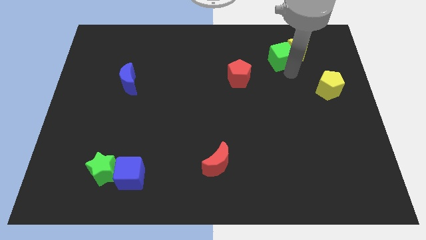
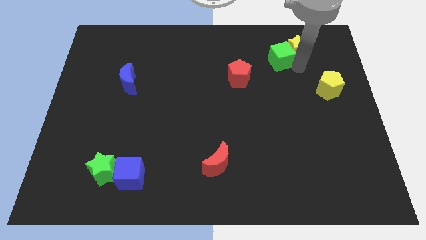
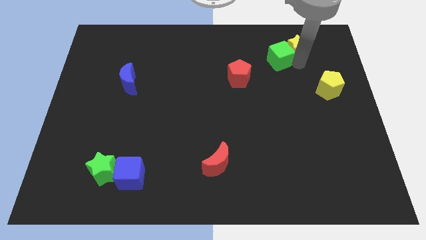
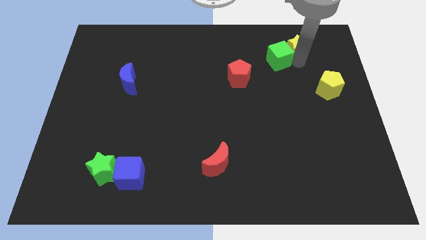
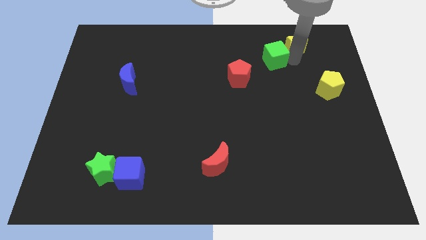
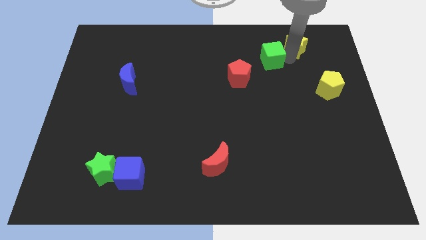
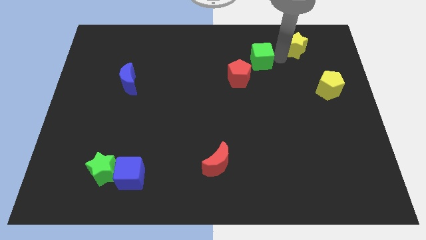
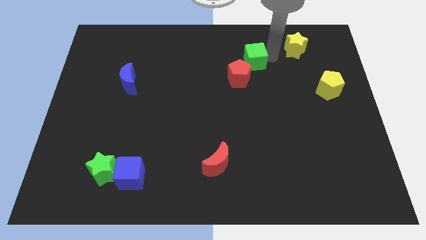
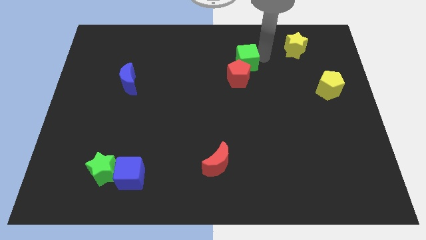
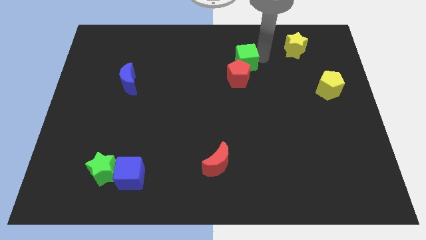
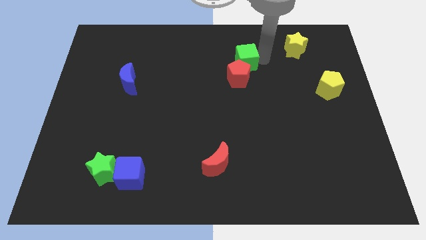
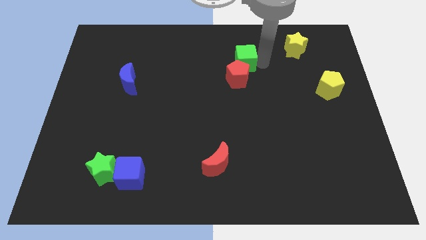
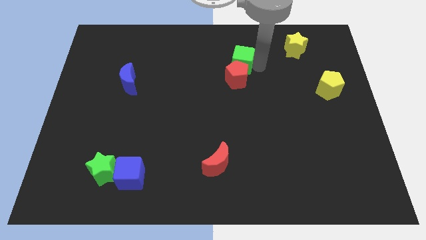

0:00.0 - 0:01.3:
drag the green cube into the top side of the red pentagon

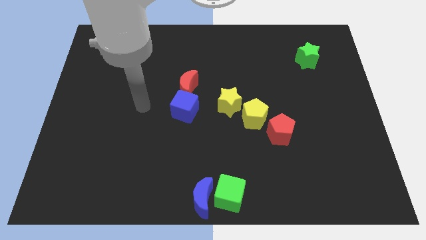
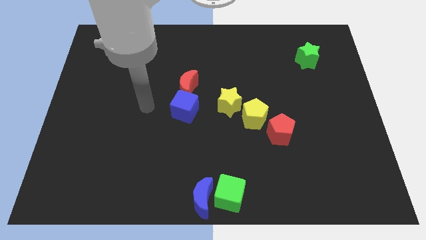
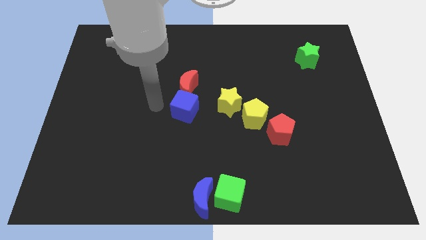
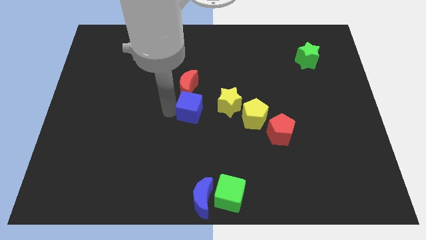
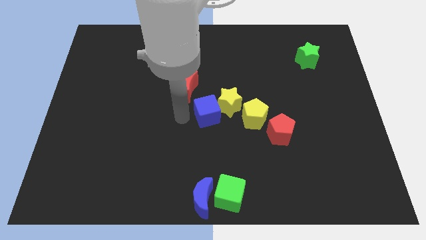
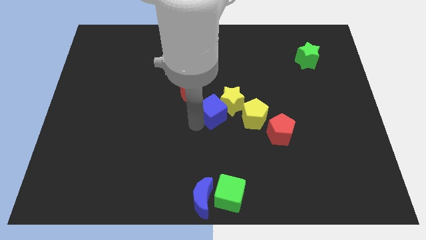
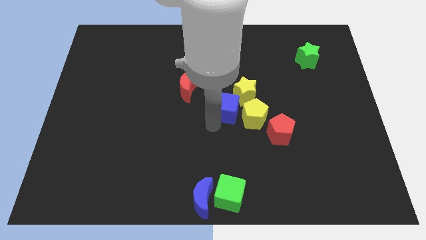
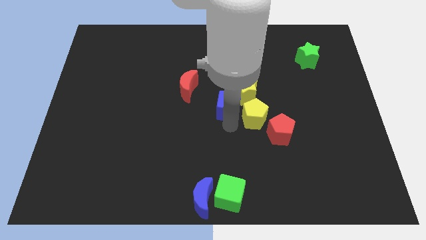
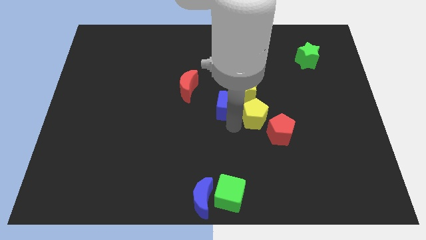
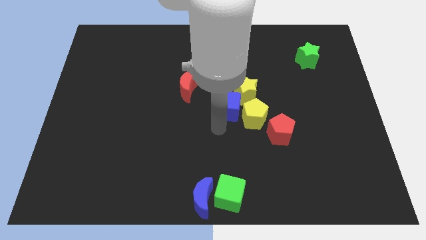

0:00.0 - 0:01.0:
push blue cube into the yellow star

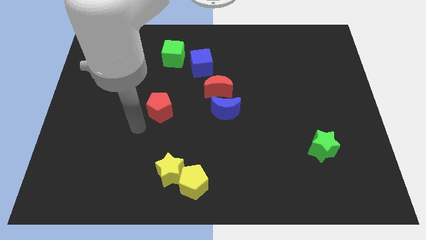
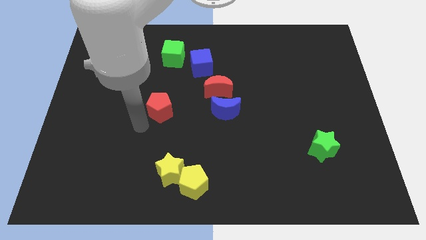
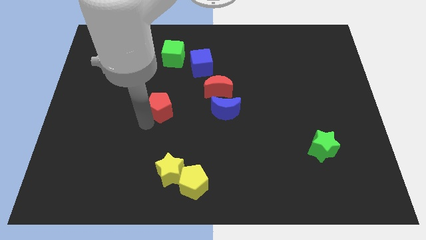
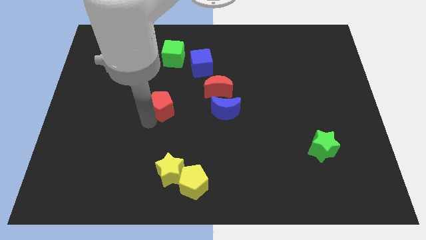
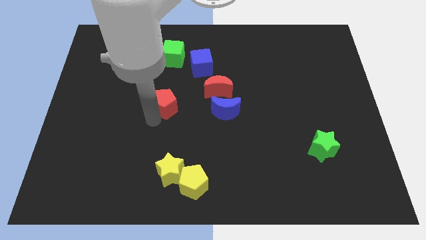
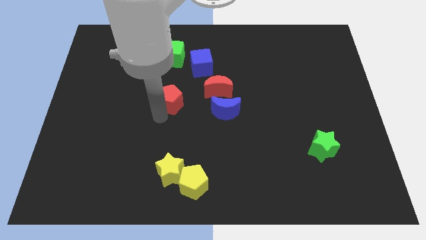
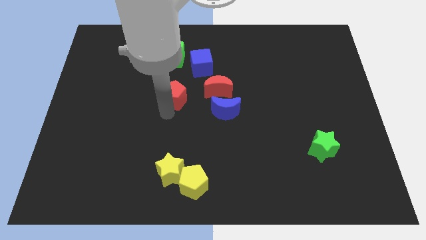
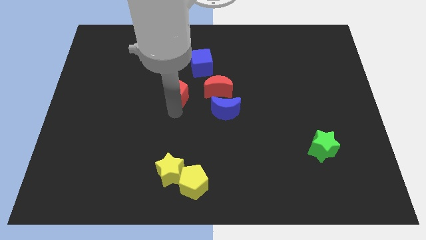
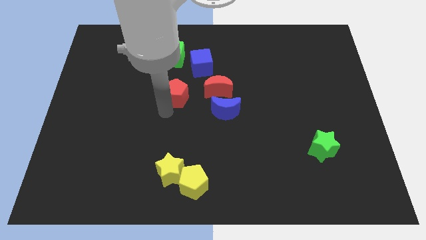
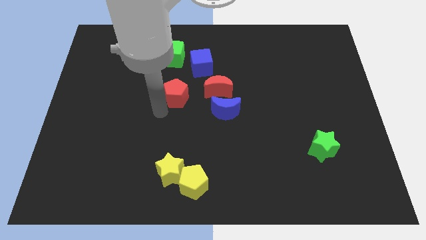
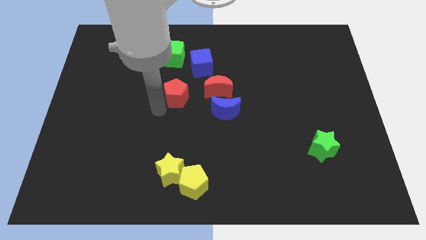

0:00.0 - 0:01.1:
place the red pentagon below the green cube

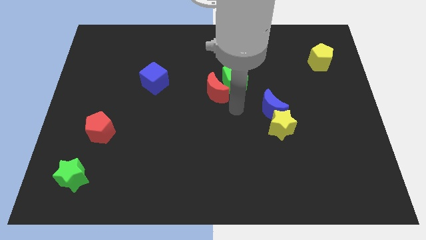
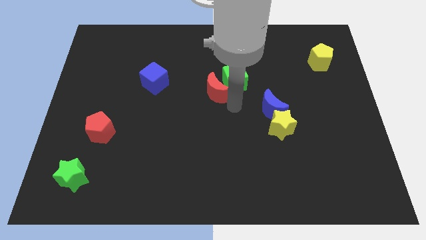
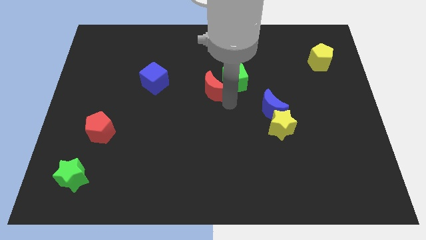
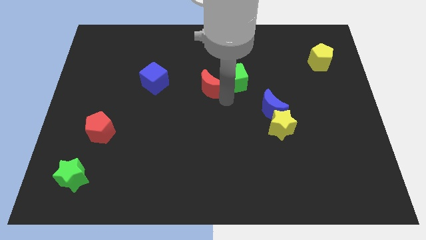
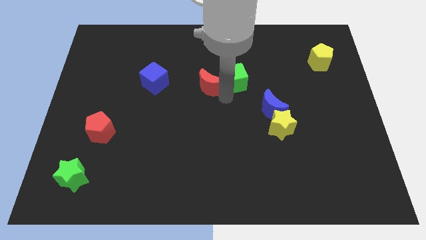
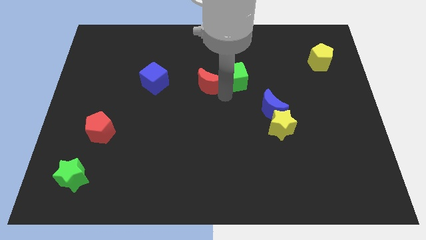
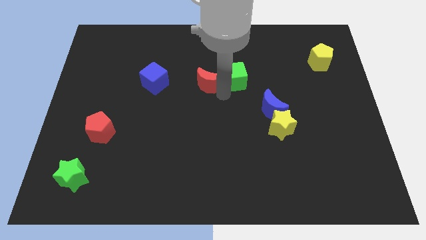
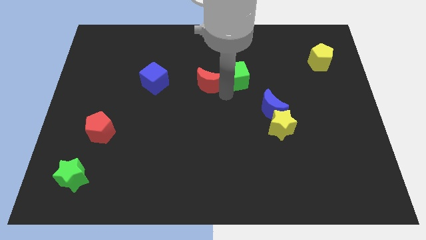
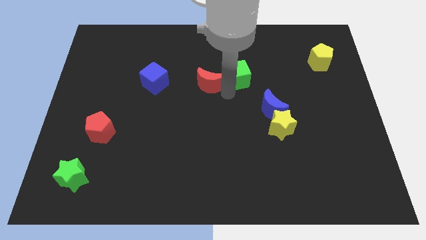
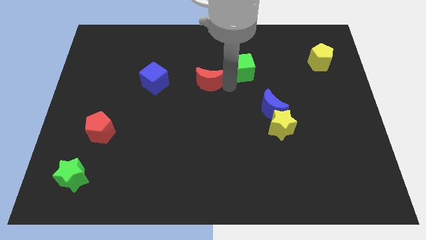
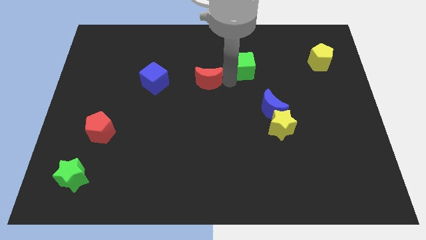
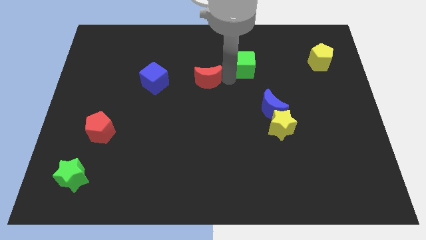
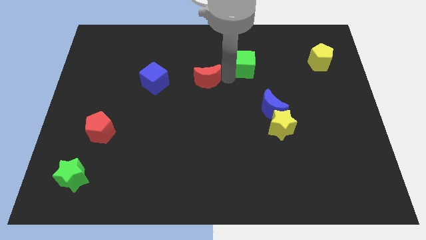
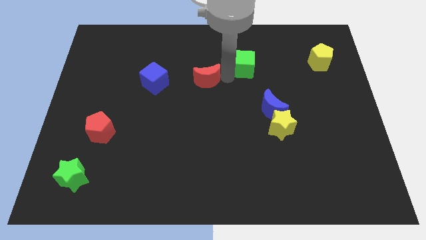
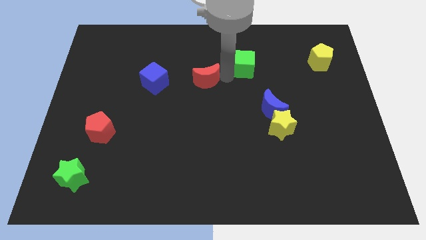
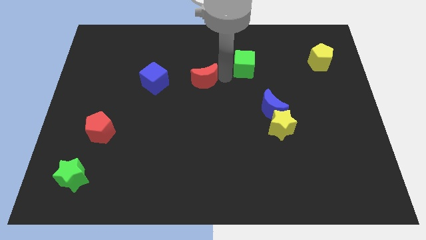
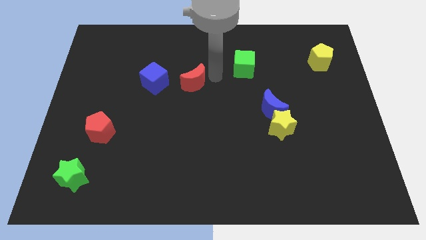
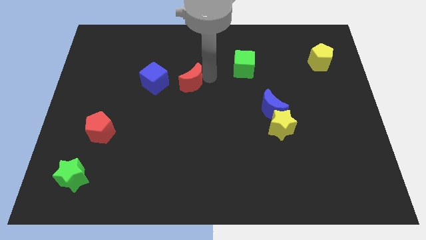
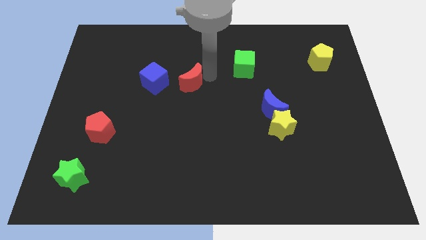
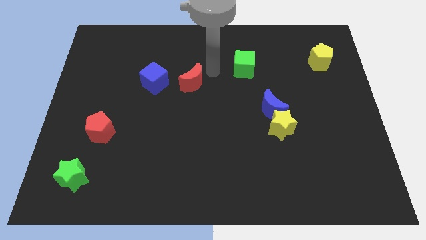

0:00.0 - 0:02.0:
separate the red moon from the green cube

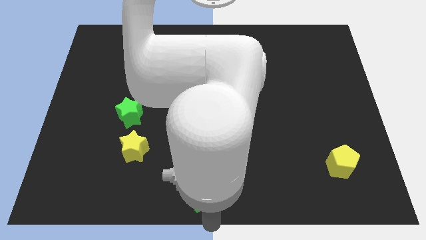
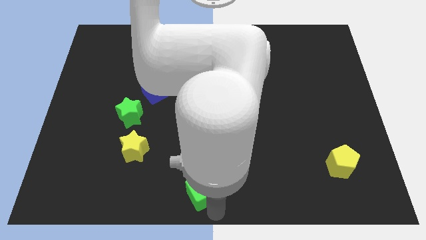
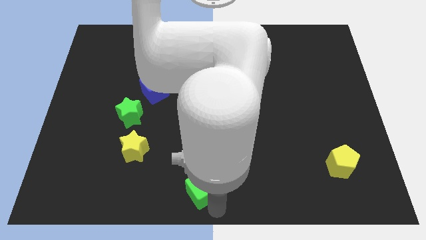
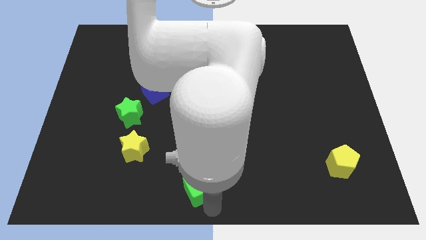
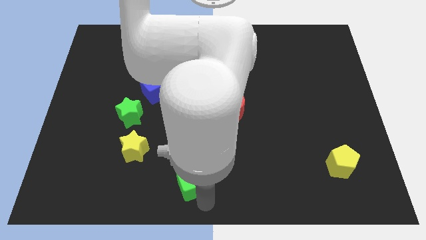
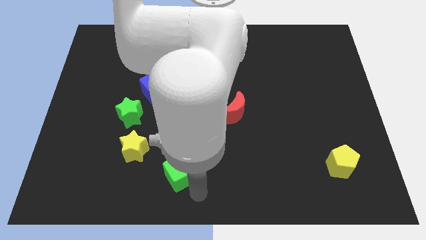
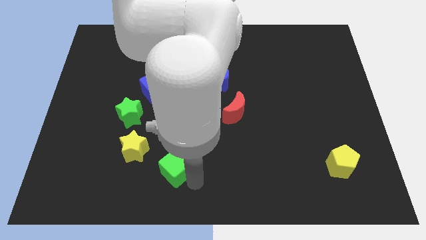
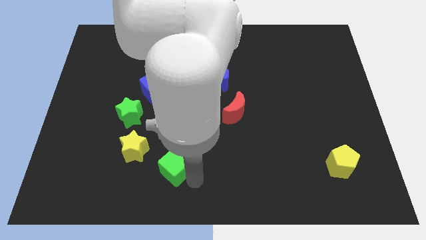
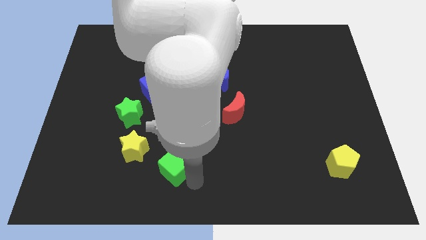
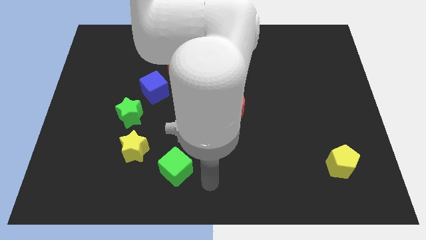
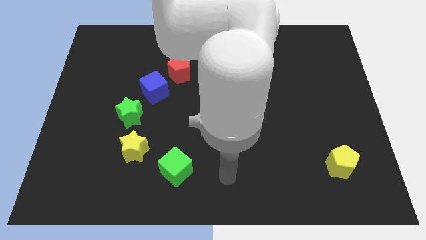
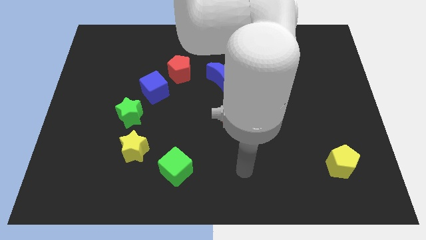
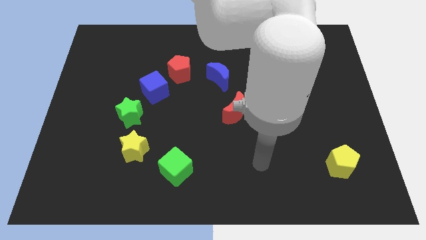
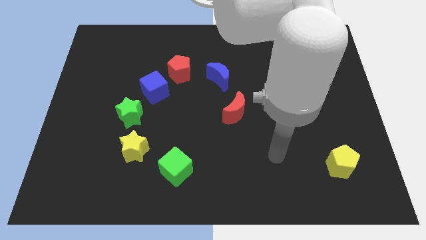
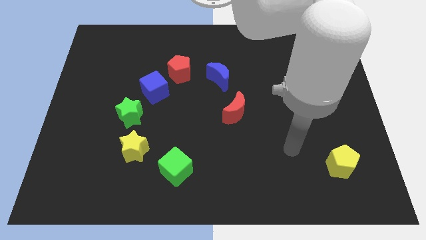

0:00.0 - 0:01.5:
slide the green cube towards the yellow star

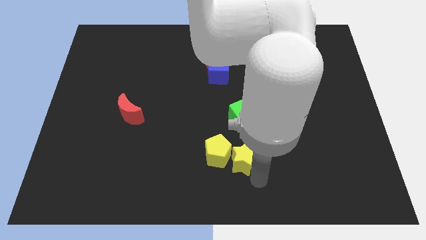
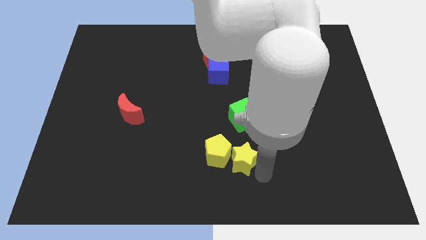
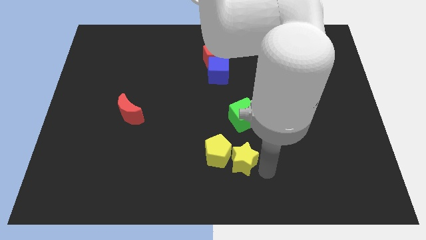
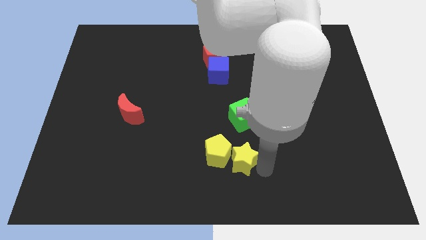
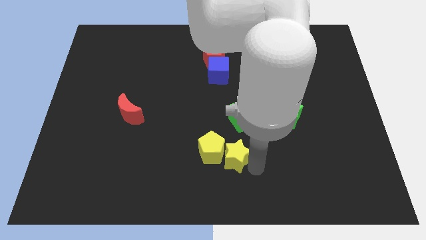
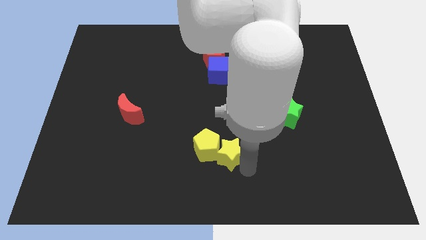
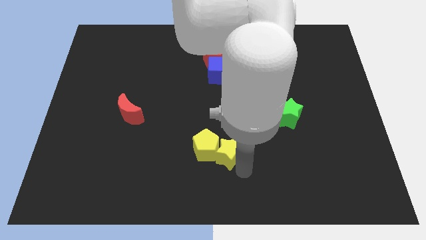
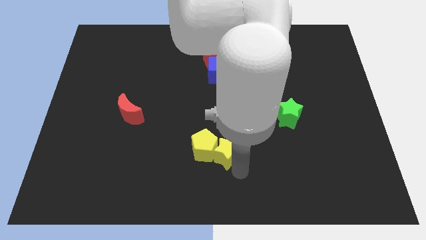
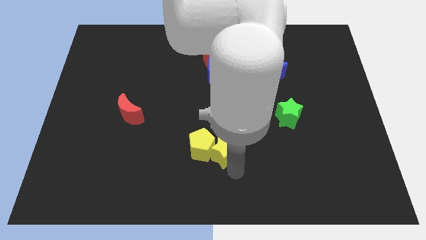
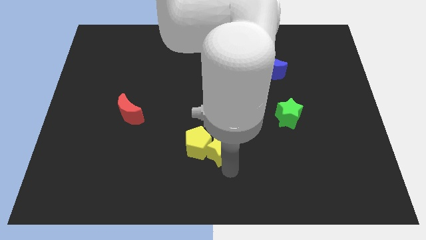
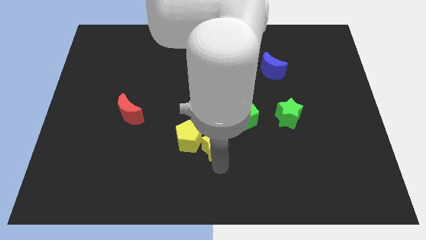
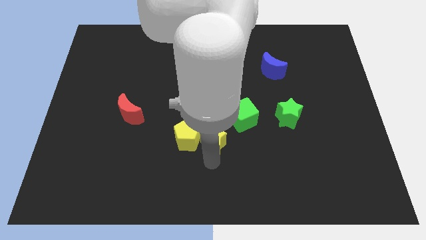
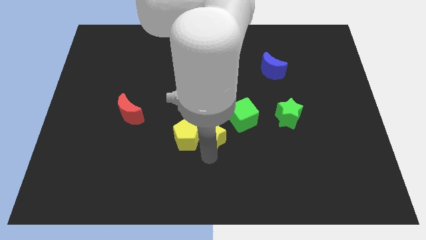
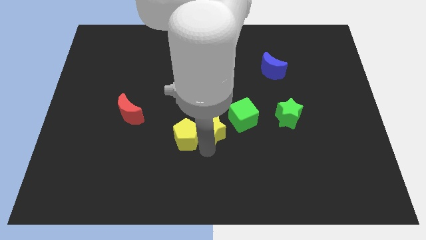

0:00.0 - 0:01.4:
move the yellow star and yellow pentagon together slightly to the left side of the board

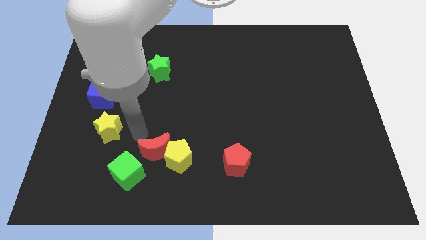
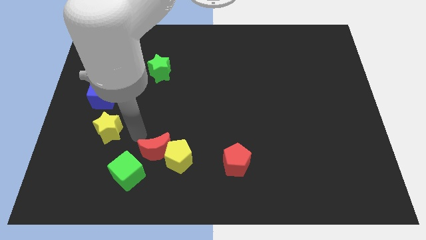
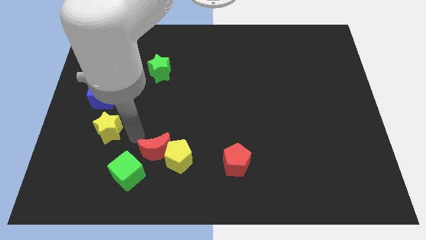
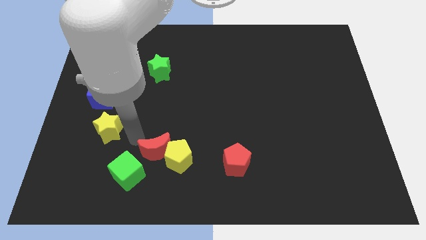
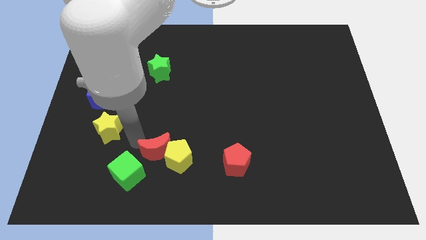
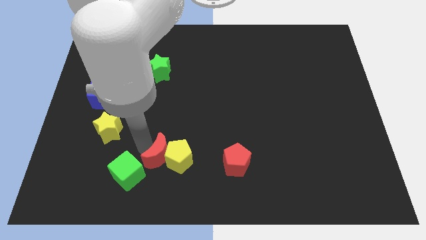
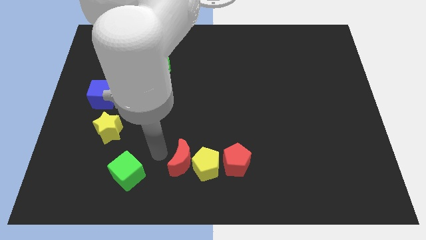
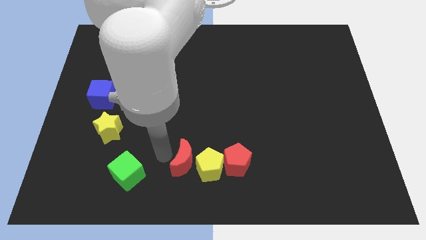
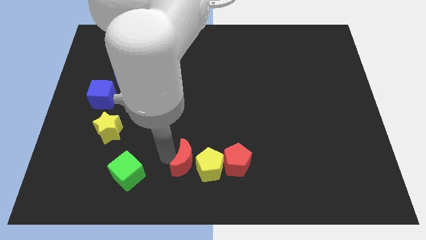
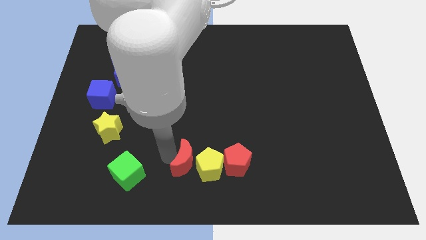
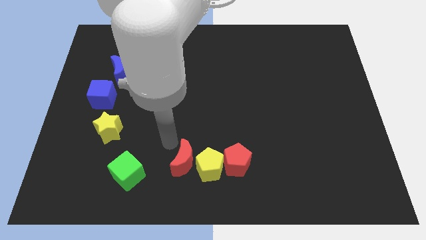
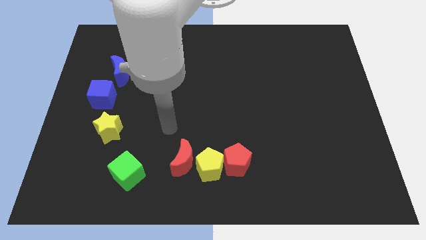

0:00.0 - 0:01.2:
push the red crescent slight to right side down
